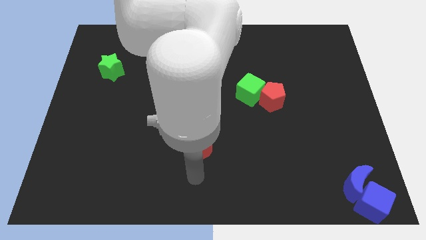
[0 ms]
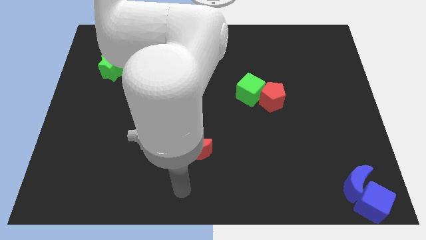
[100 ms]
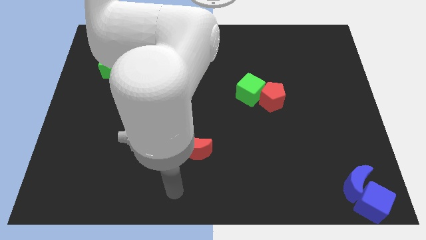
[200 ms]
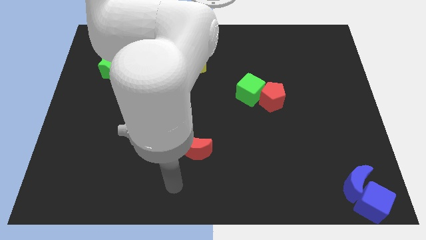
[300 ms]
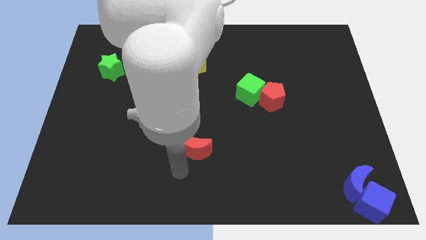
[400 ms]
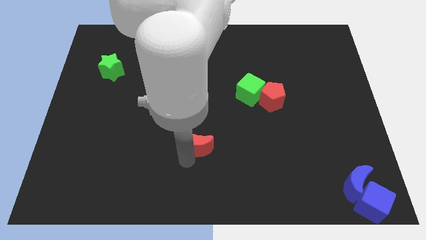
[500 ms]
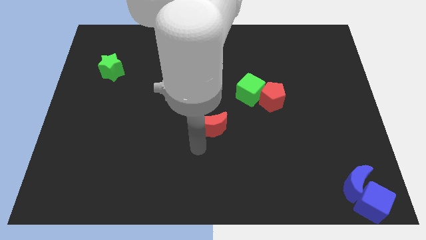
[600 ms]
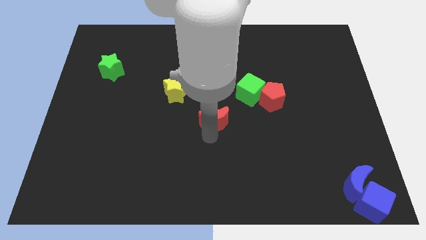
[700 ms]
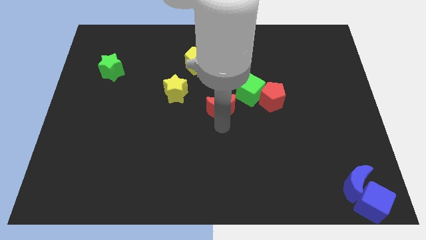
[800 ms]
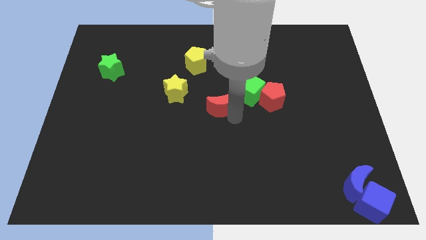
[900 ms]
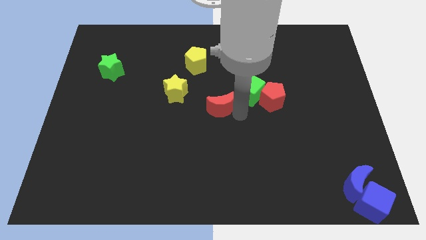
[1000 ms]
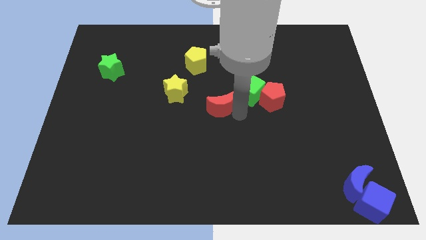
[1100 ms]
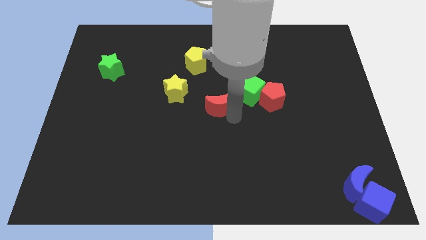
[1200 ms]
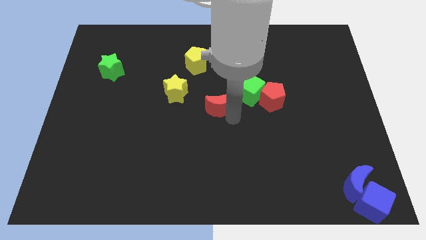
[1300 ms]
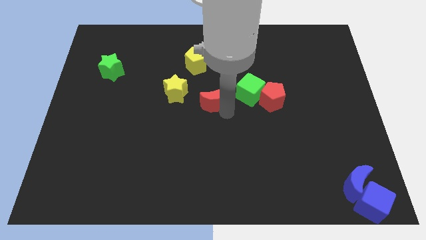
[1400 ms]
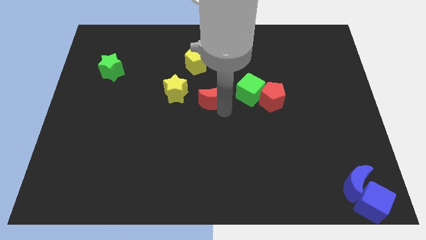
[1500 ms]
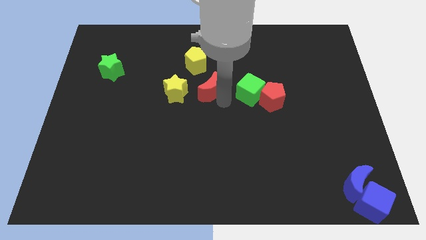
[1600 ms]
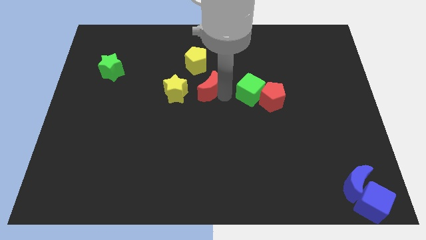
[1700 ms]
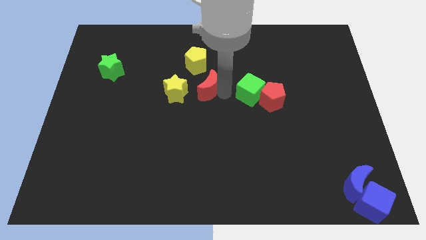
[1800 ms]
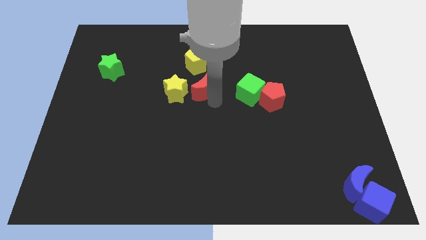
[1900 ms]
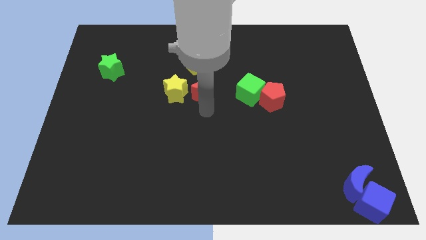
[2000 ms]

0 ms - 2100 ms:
place the red crescent in between yellow star and green cube

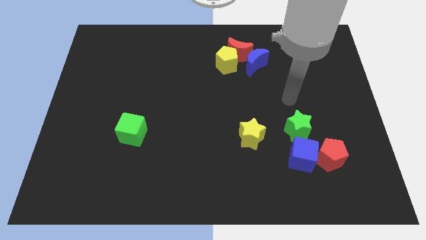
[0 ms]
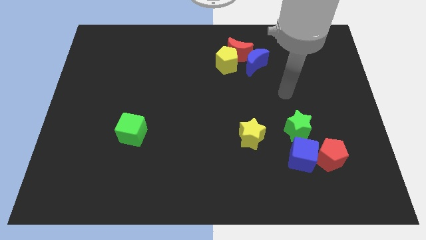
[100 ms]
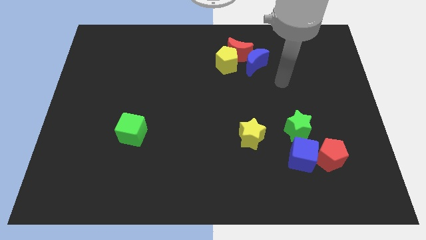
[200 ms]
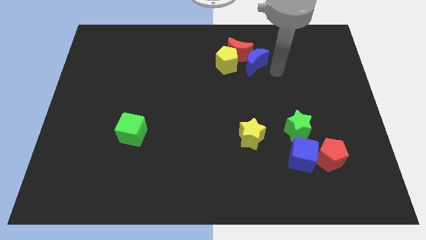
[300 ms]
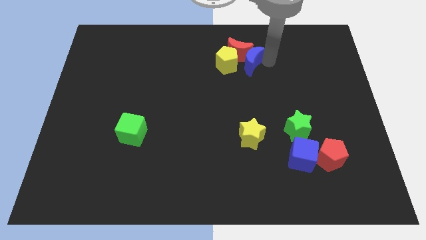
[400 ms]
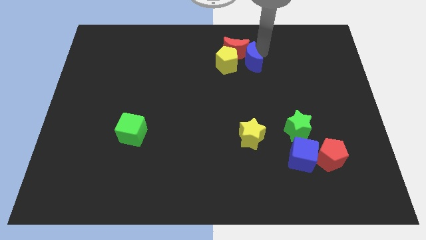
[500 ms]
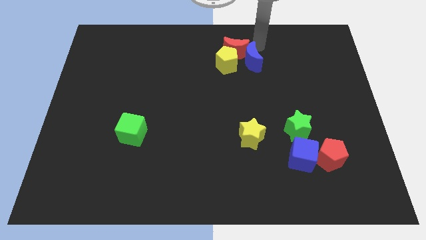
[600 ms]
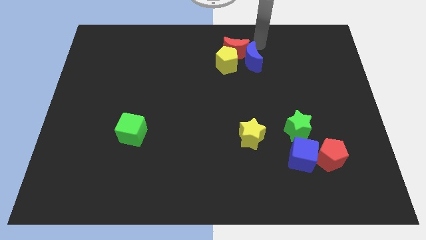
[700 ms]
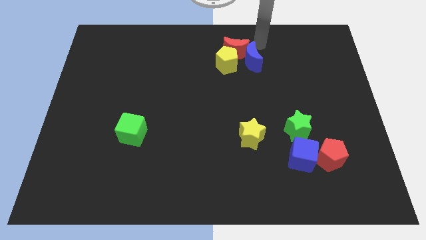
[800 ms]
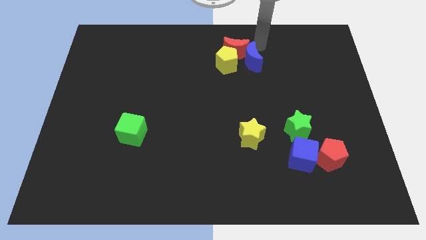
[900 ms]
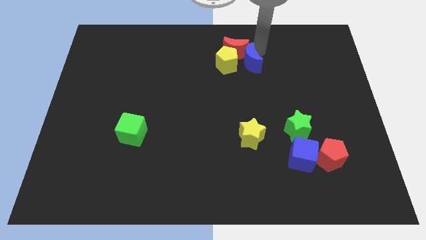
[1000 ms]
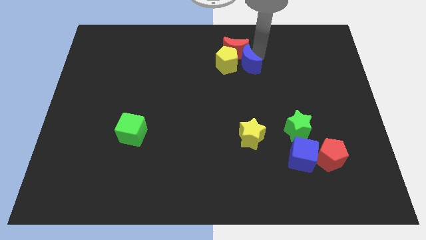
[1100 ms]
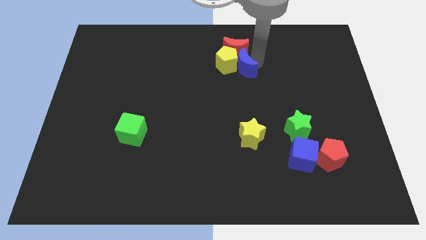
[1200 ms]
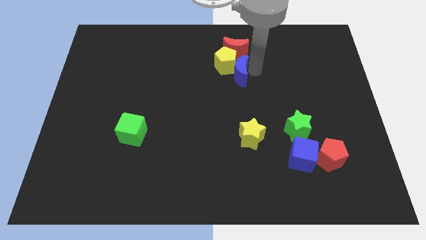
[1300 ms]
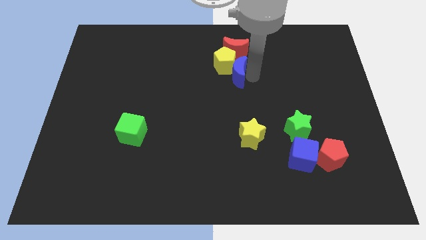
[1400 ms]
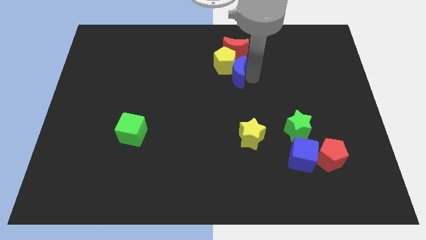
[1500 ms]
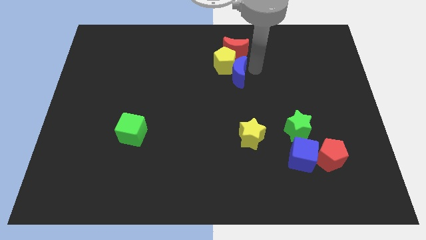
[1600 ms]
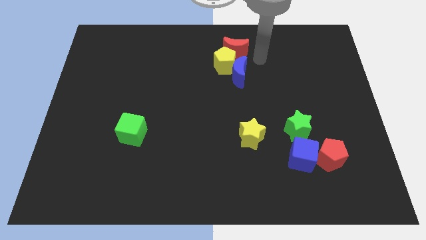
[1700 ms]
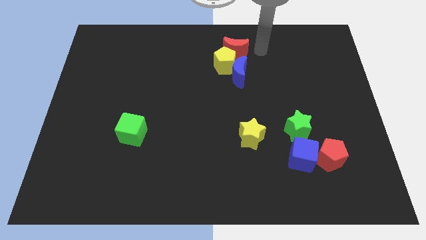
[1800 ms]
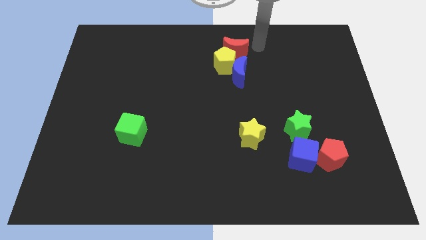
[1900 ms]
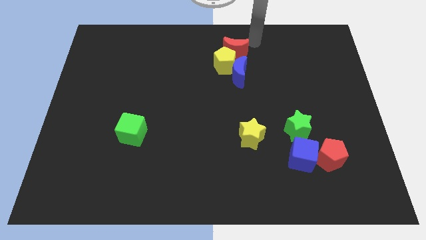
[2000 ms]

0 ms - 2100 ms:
push blue moon downwards slightly

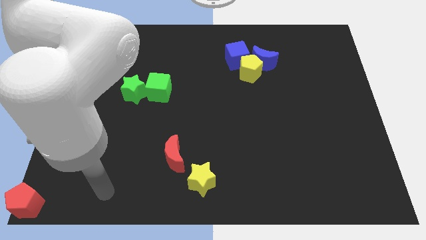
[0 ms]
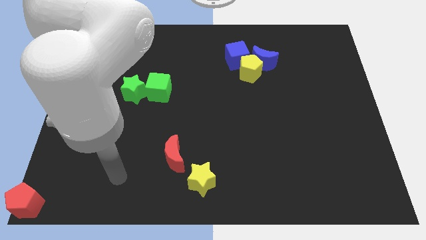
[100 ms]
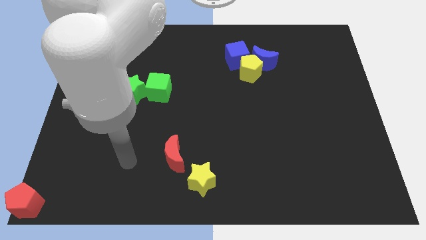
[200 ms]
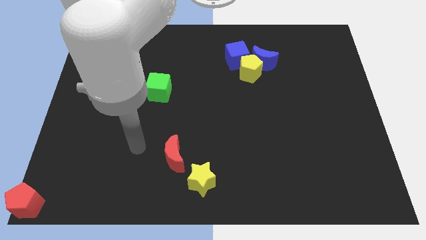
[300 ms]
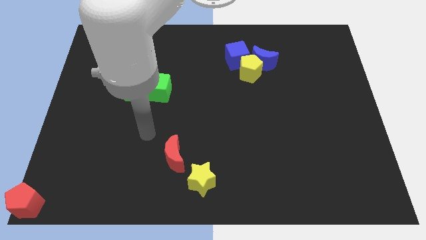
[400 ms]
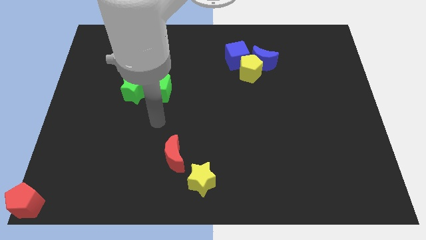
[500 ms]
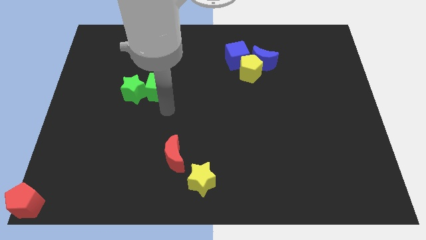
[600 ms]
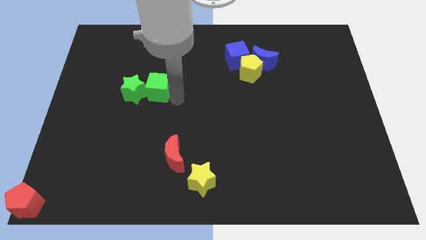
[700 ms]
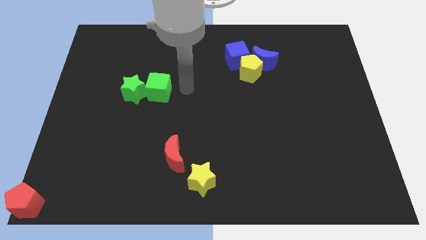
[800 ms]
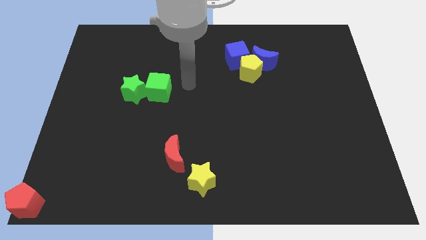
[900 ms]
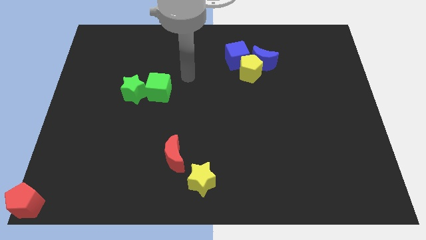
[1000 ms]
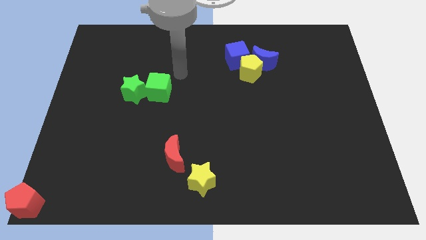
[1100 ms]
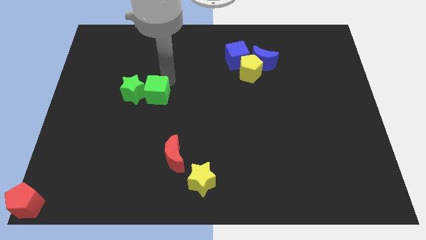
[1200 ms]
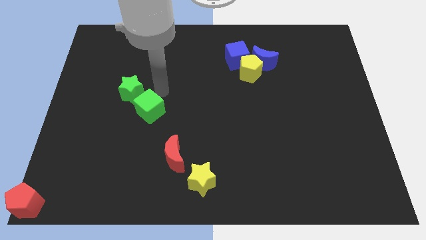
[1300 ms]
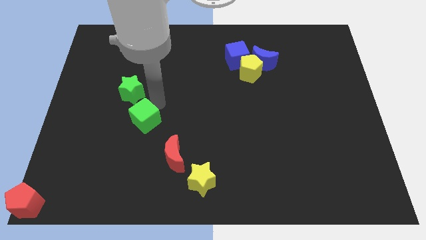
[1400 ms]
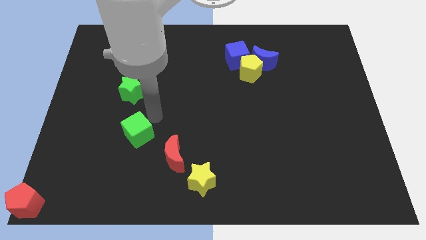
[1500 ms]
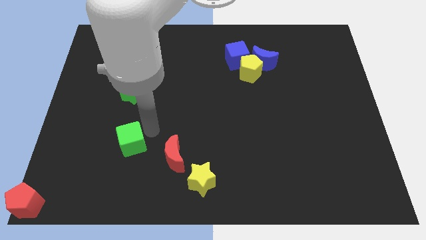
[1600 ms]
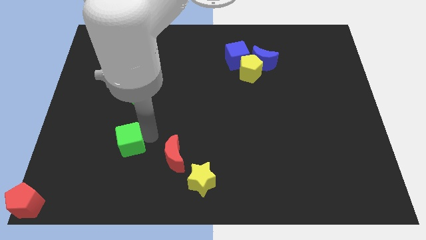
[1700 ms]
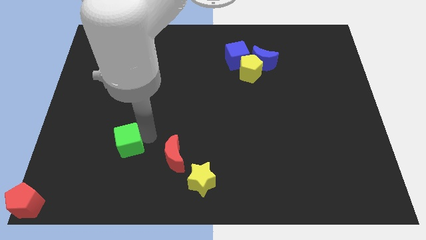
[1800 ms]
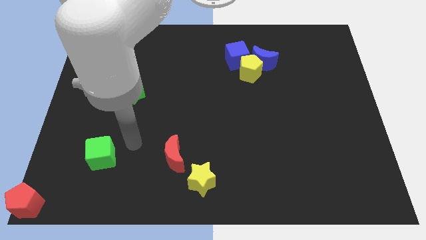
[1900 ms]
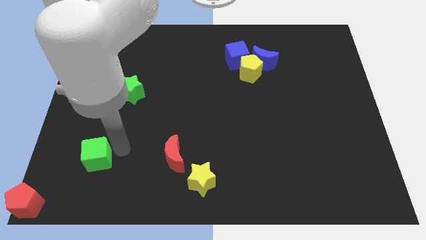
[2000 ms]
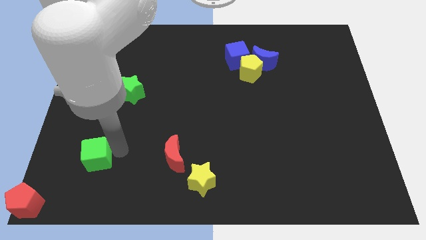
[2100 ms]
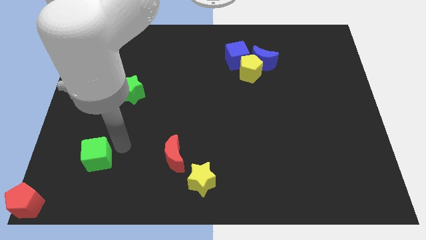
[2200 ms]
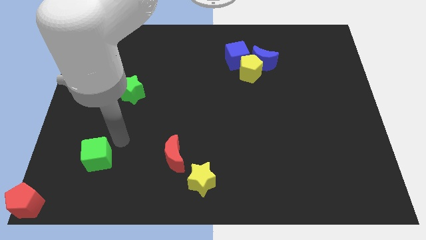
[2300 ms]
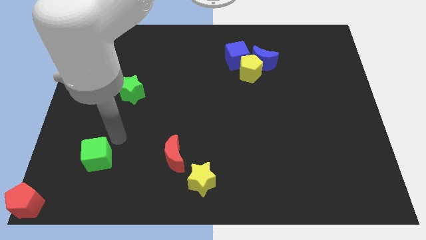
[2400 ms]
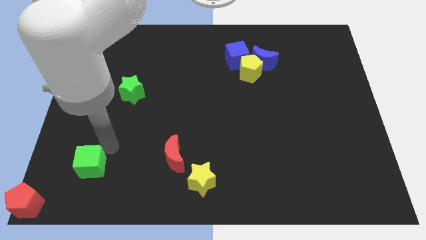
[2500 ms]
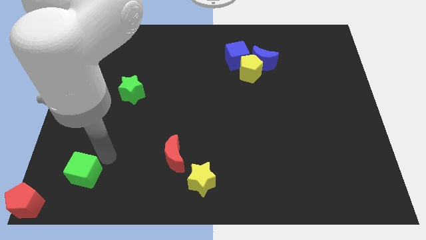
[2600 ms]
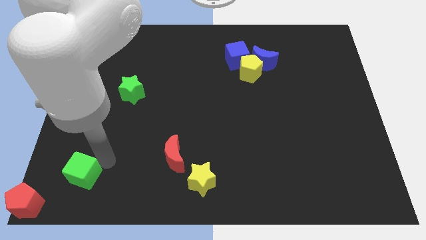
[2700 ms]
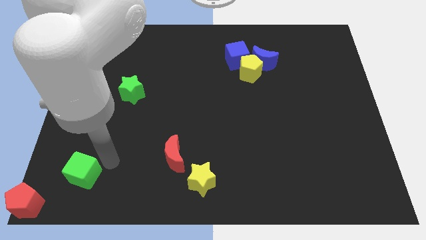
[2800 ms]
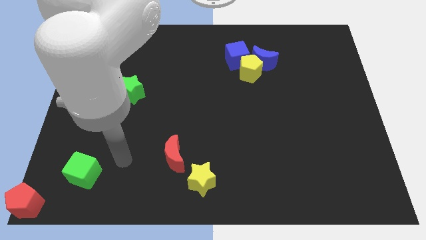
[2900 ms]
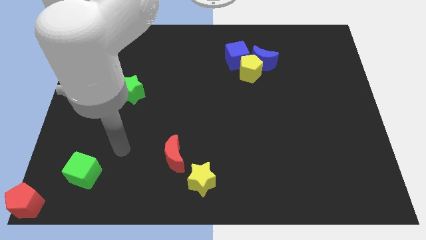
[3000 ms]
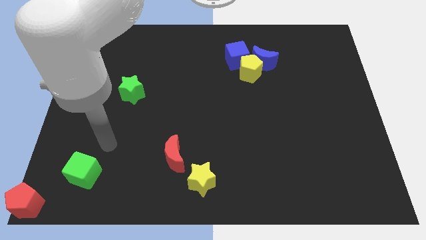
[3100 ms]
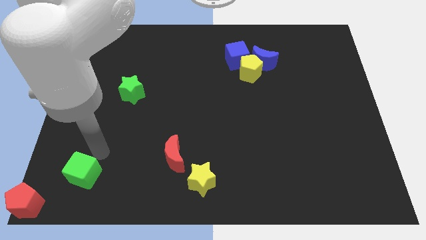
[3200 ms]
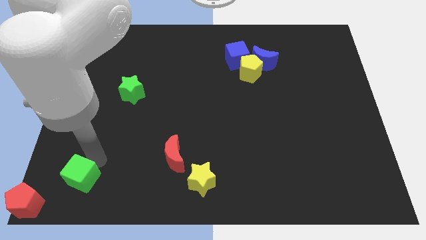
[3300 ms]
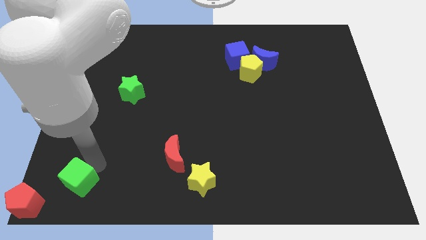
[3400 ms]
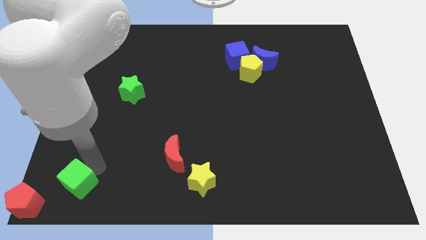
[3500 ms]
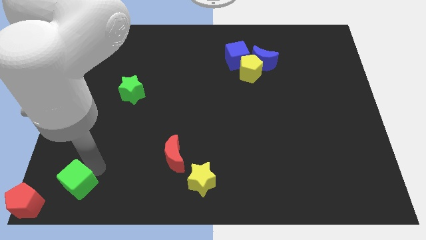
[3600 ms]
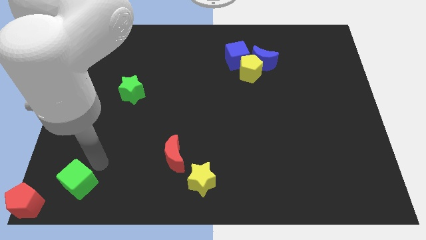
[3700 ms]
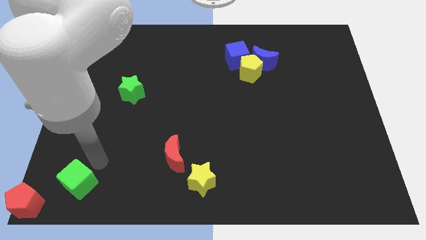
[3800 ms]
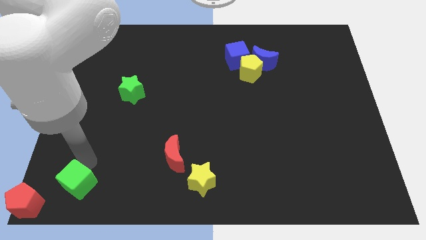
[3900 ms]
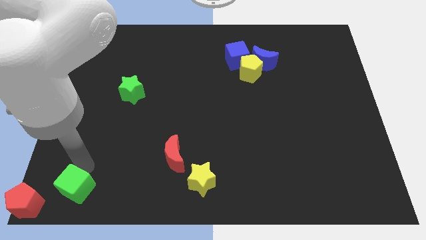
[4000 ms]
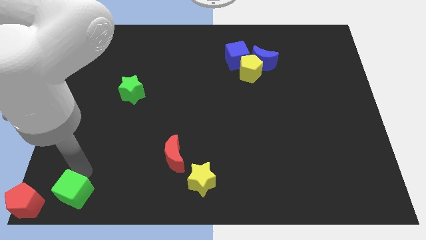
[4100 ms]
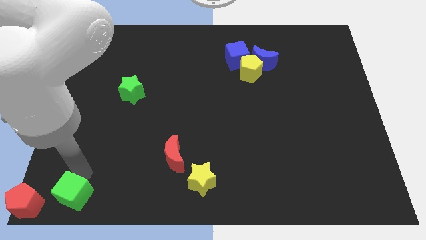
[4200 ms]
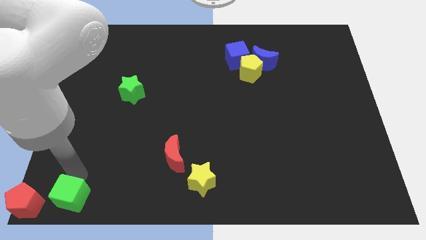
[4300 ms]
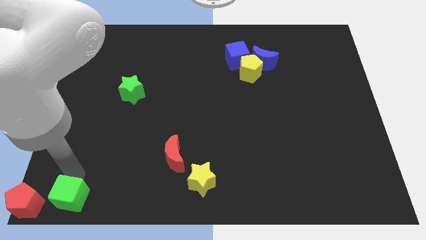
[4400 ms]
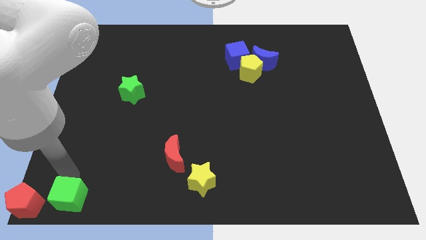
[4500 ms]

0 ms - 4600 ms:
move the green cube to the right of the red pentagon

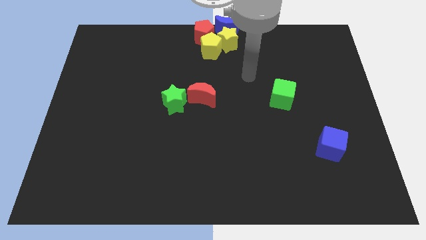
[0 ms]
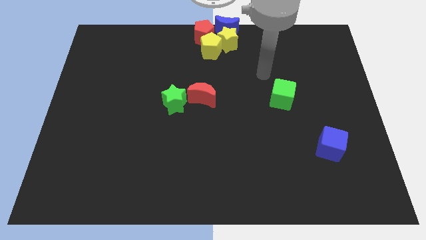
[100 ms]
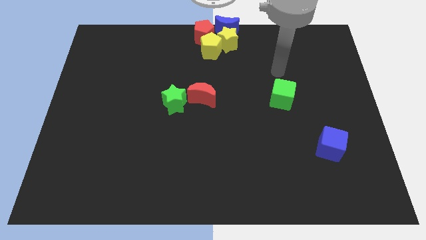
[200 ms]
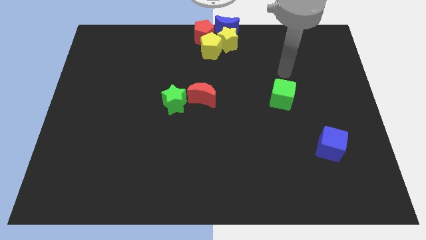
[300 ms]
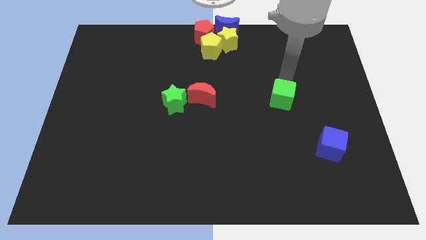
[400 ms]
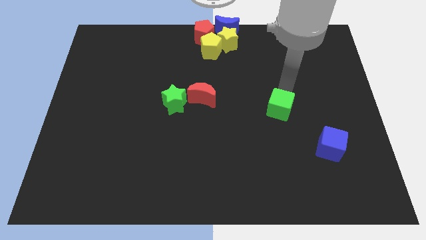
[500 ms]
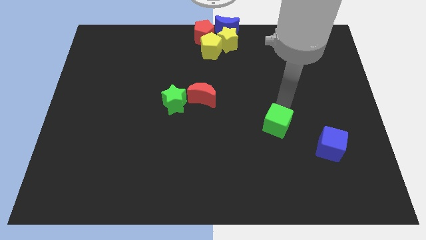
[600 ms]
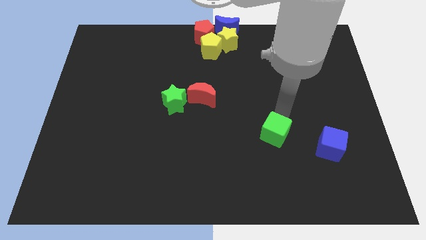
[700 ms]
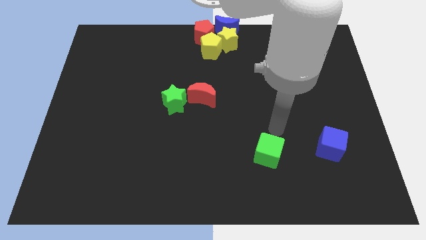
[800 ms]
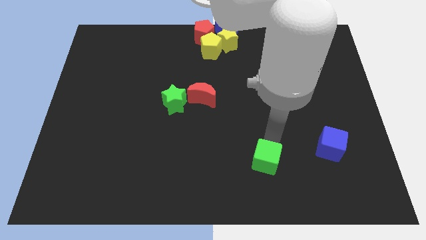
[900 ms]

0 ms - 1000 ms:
move the green cube to the bottom center
